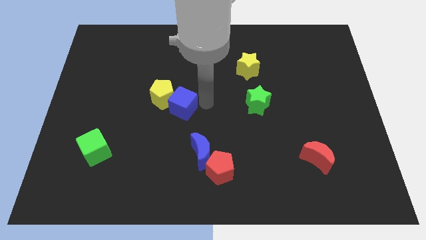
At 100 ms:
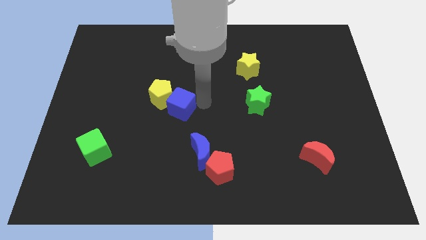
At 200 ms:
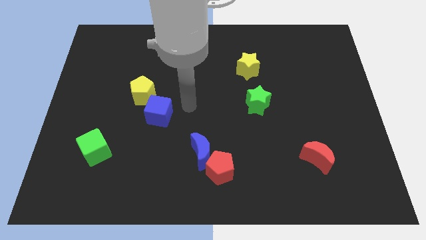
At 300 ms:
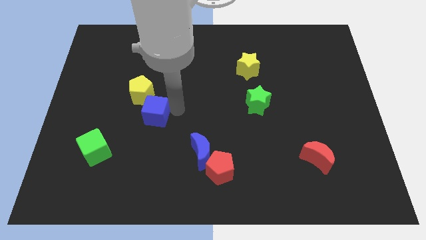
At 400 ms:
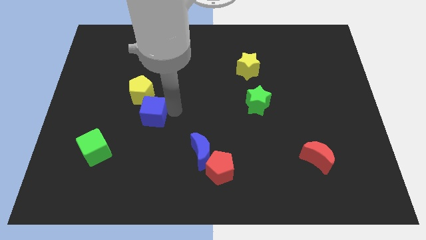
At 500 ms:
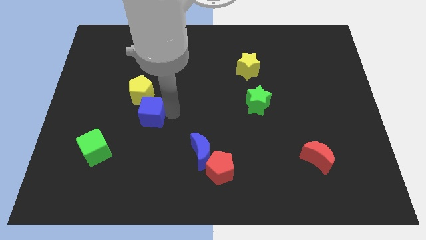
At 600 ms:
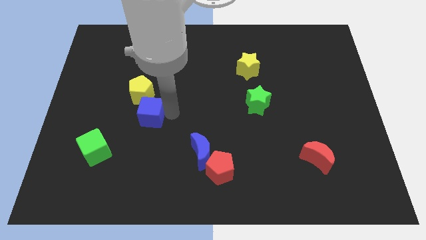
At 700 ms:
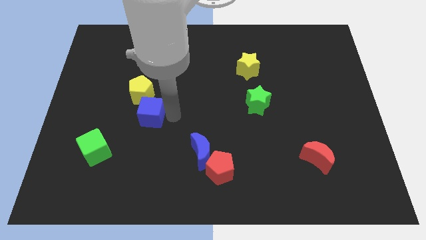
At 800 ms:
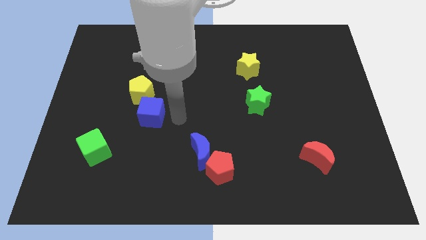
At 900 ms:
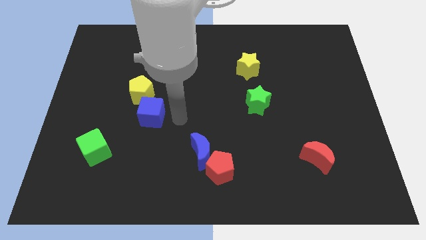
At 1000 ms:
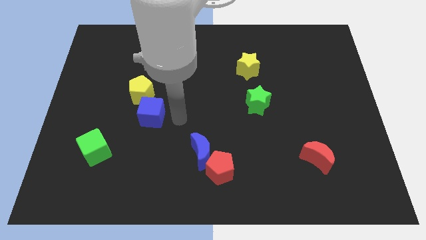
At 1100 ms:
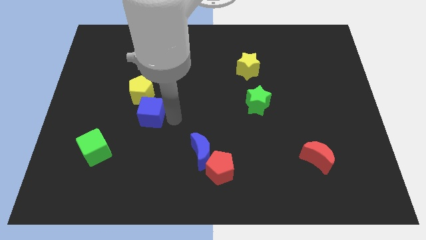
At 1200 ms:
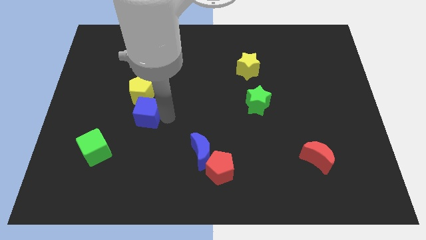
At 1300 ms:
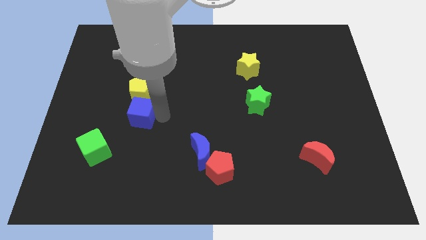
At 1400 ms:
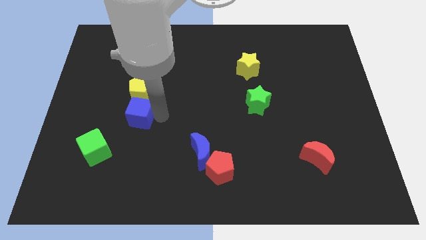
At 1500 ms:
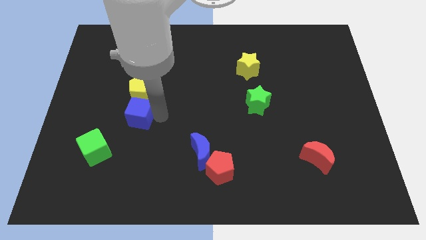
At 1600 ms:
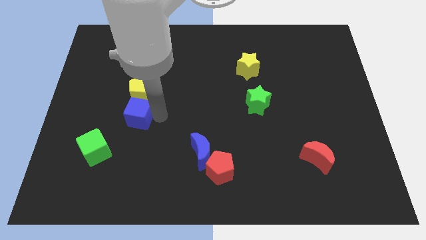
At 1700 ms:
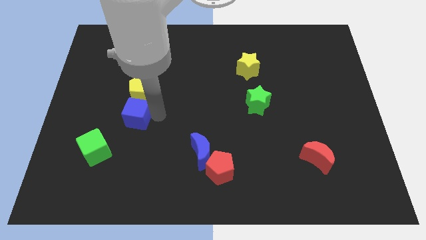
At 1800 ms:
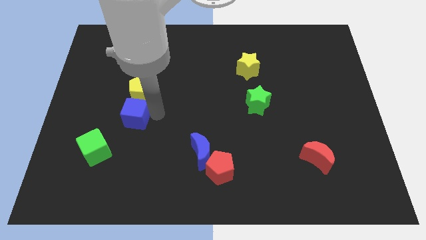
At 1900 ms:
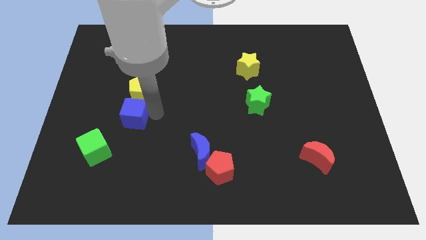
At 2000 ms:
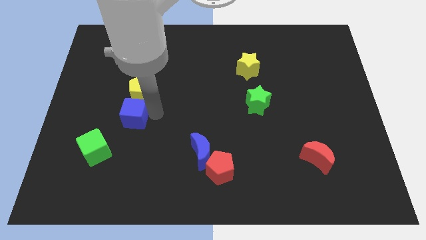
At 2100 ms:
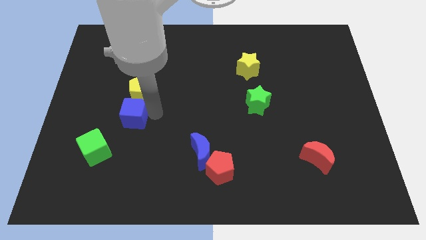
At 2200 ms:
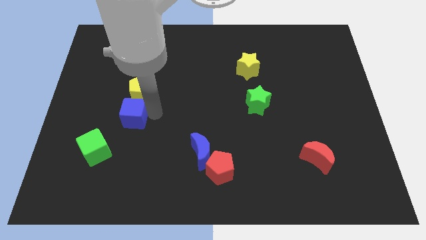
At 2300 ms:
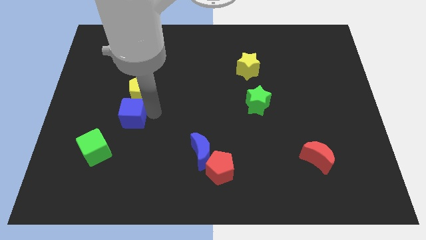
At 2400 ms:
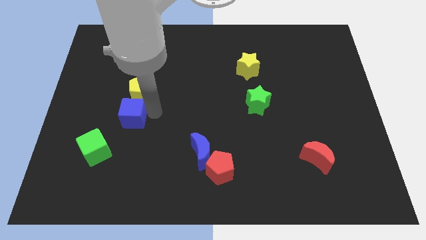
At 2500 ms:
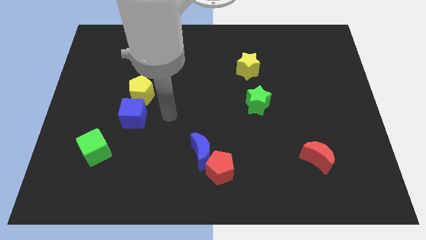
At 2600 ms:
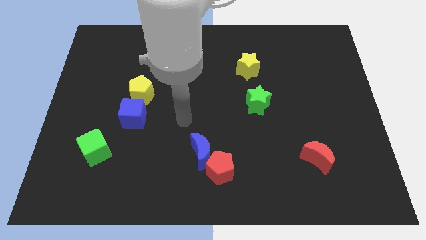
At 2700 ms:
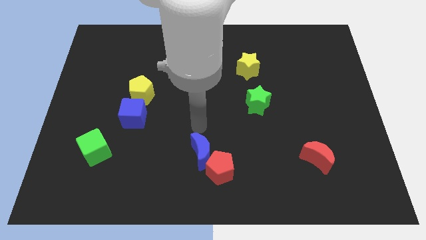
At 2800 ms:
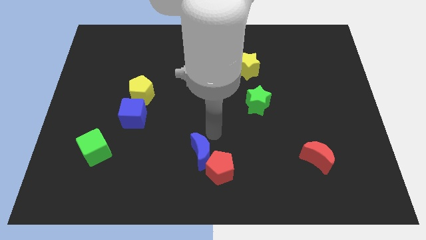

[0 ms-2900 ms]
place blue cube below to the yellow pentagon

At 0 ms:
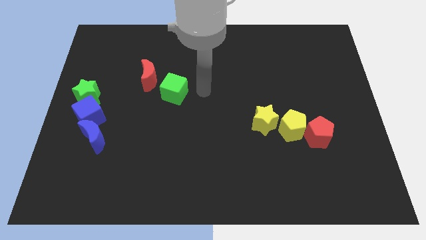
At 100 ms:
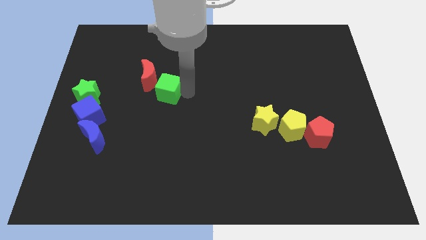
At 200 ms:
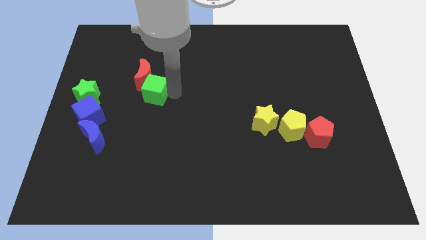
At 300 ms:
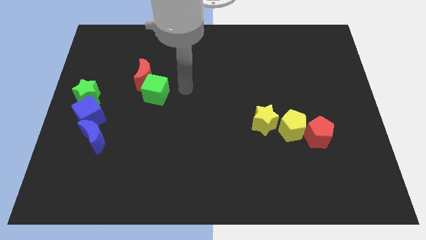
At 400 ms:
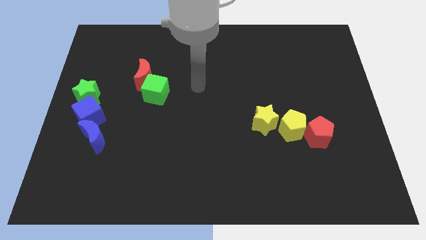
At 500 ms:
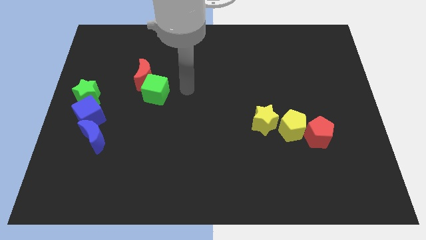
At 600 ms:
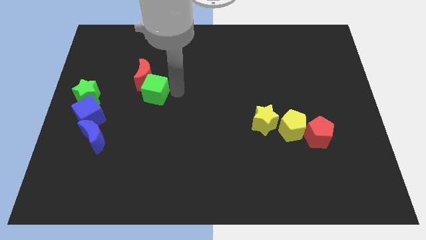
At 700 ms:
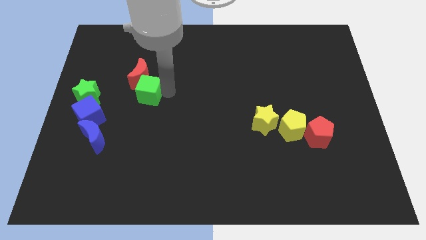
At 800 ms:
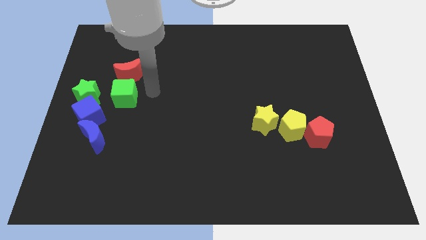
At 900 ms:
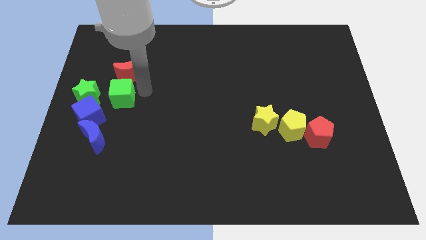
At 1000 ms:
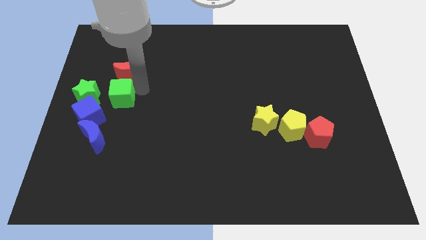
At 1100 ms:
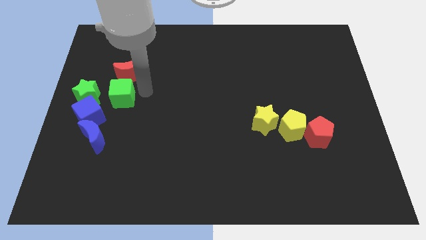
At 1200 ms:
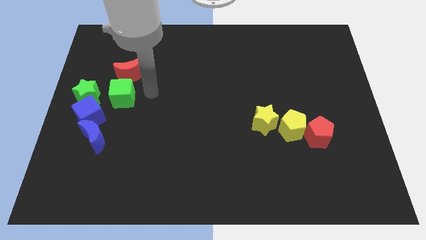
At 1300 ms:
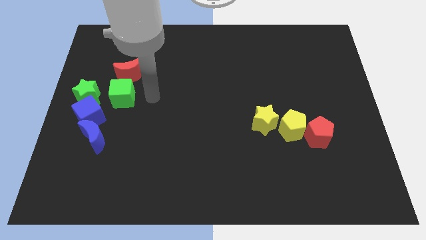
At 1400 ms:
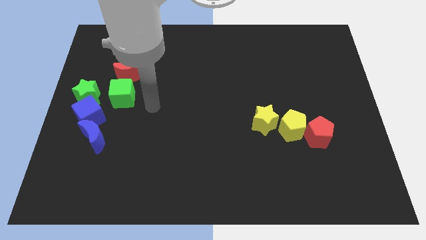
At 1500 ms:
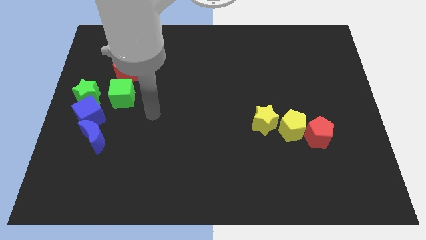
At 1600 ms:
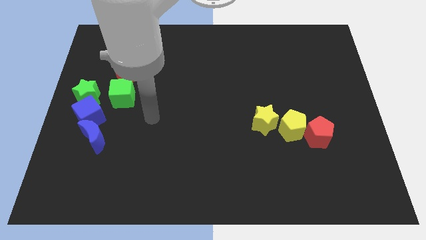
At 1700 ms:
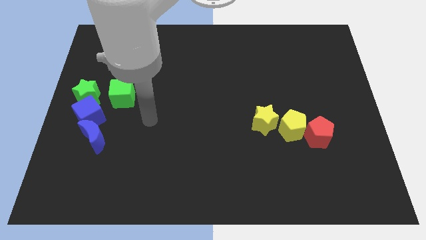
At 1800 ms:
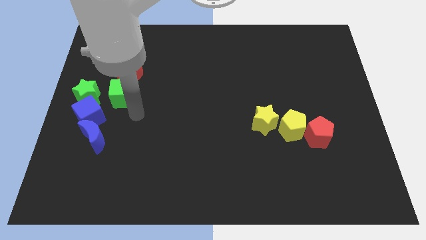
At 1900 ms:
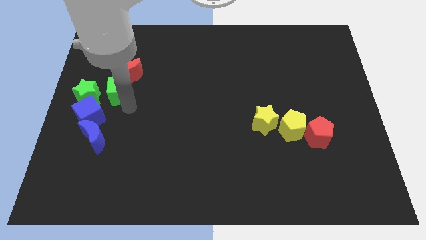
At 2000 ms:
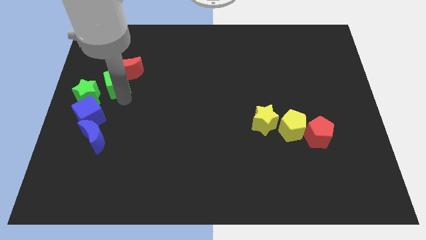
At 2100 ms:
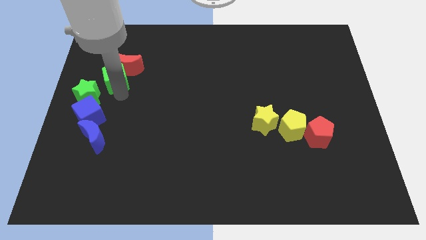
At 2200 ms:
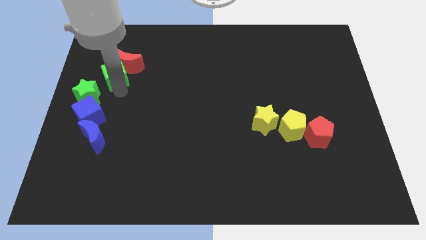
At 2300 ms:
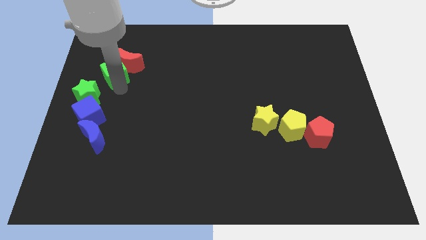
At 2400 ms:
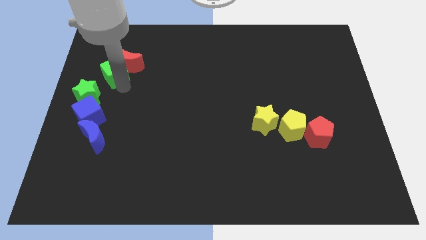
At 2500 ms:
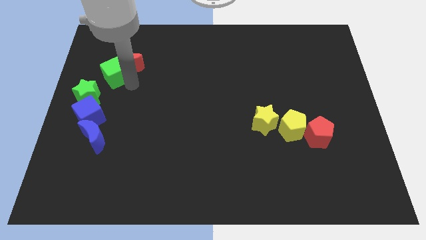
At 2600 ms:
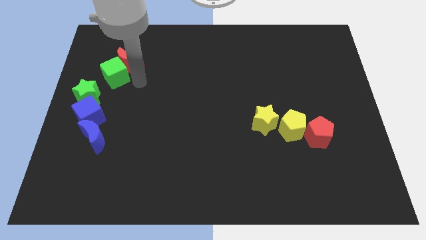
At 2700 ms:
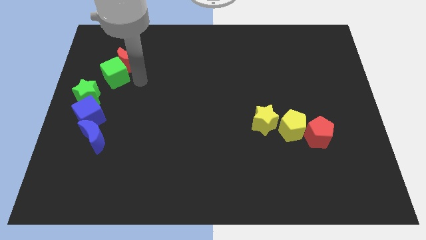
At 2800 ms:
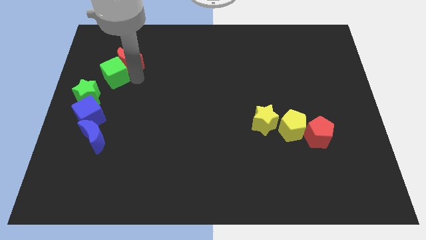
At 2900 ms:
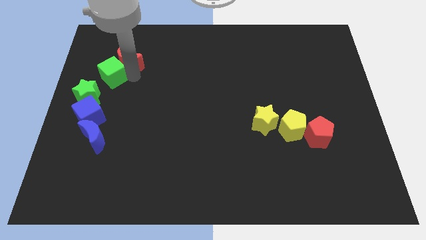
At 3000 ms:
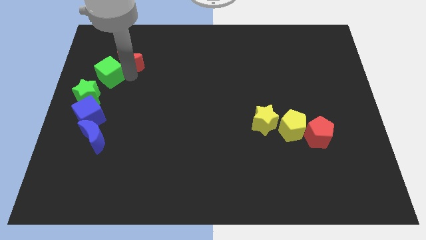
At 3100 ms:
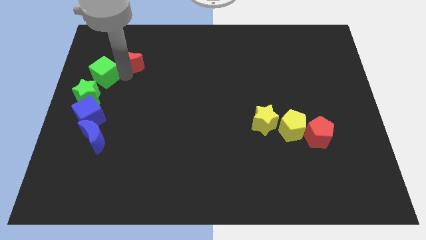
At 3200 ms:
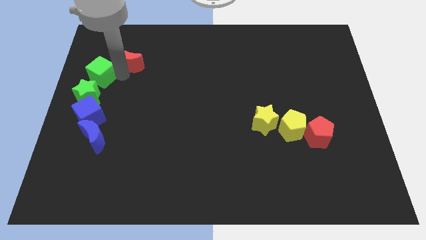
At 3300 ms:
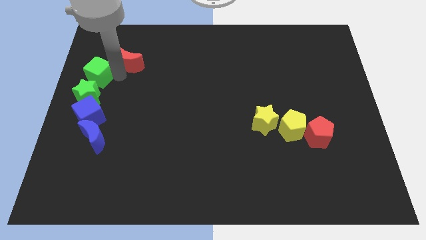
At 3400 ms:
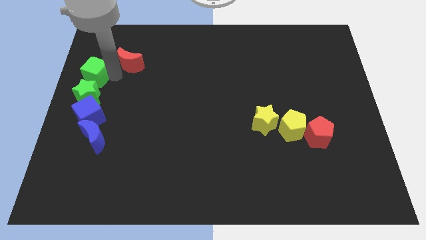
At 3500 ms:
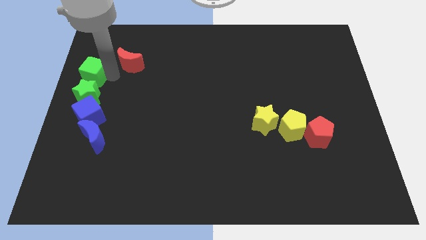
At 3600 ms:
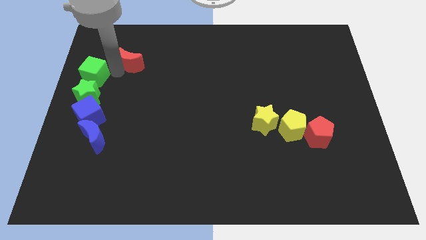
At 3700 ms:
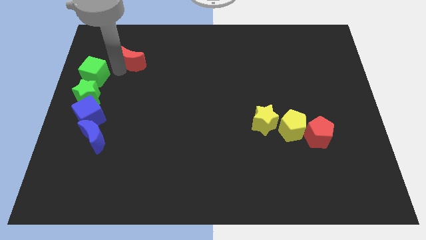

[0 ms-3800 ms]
move the green cube above the green star

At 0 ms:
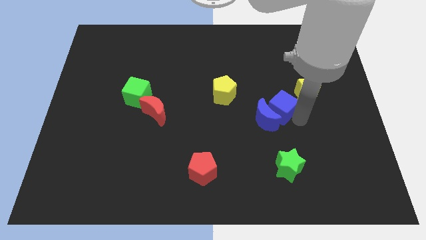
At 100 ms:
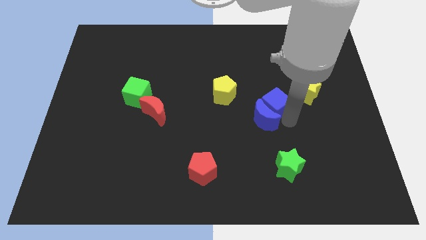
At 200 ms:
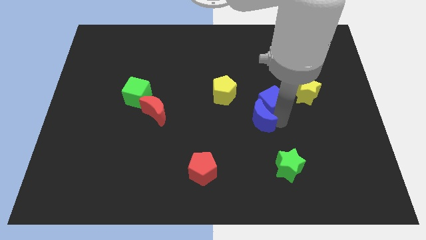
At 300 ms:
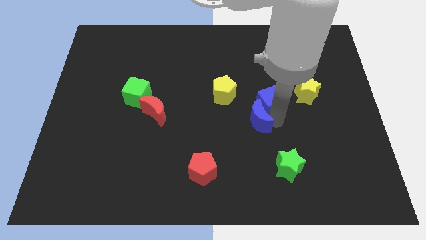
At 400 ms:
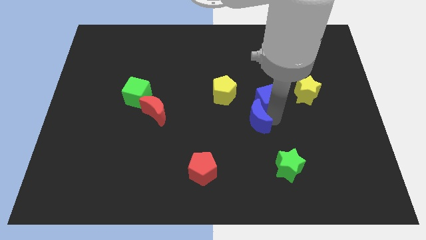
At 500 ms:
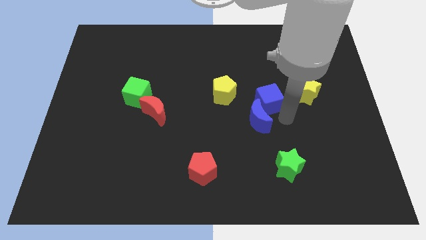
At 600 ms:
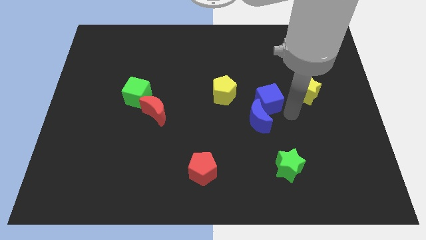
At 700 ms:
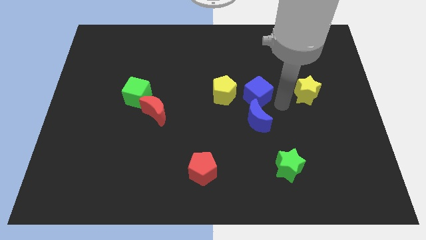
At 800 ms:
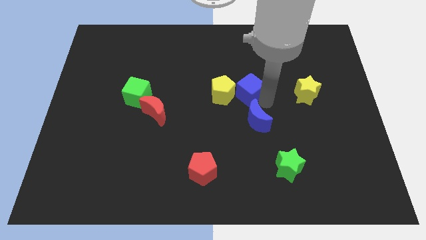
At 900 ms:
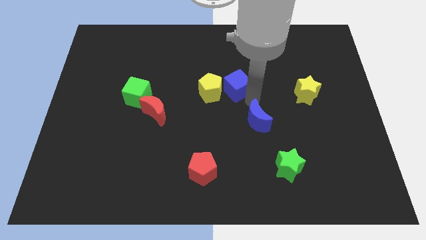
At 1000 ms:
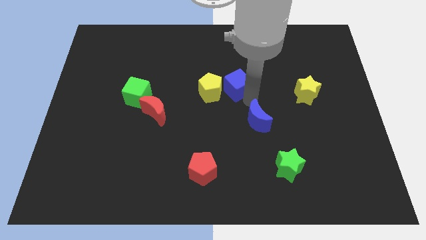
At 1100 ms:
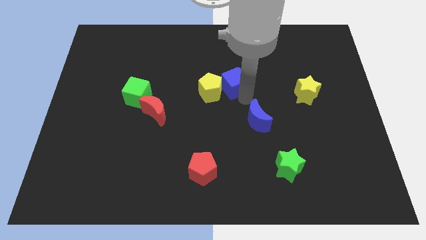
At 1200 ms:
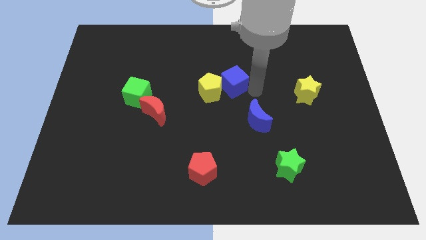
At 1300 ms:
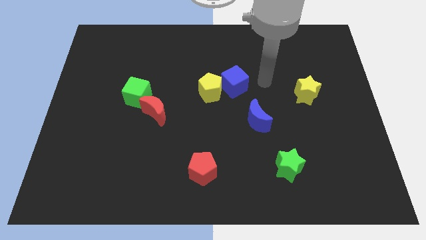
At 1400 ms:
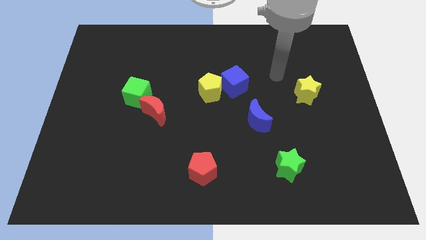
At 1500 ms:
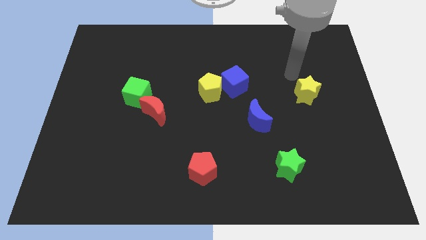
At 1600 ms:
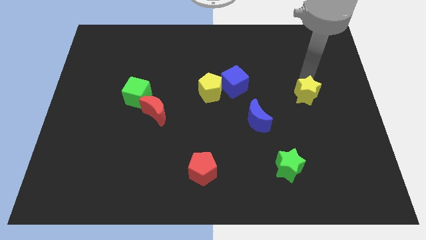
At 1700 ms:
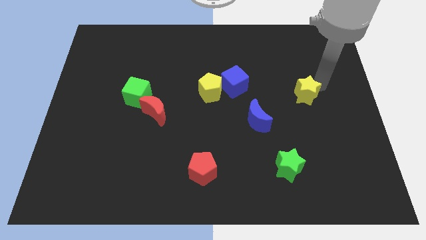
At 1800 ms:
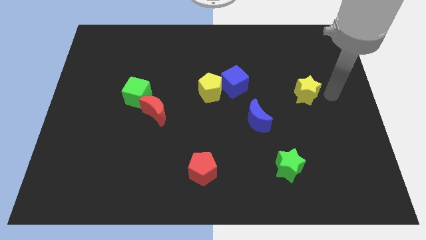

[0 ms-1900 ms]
move the blue cube near to the yellow pentagon

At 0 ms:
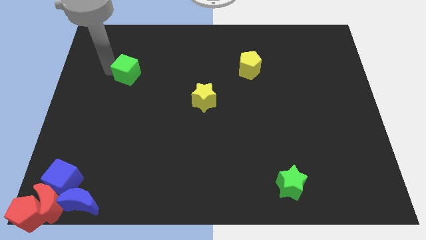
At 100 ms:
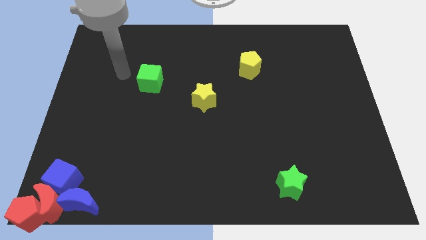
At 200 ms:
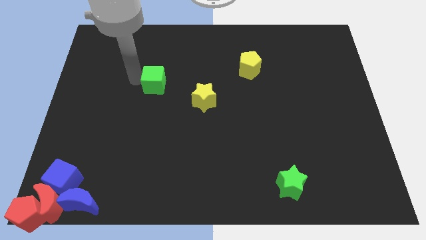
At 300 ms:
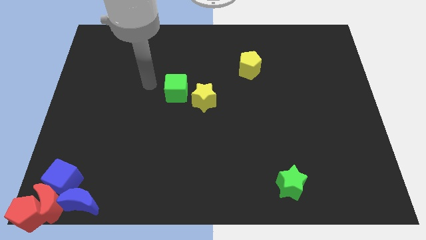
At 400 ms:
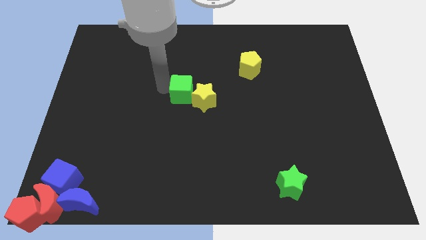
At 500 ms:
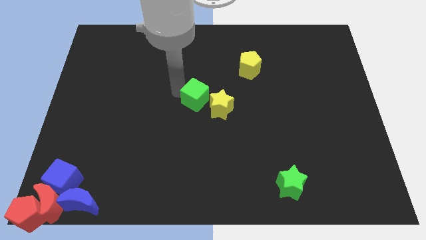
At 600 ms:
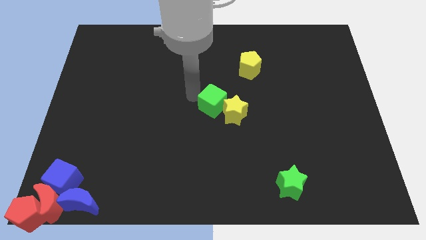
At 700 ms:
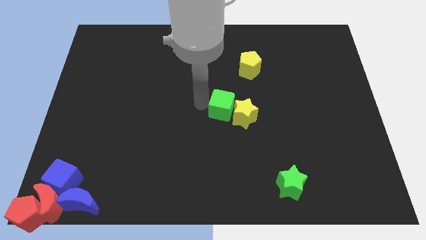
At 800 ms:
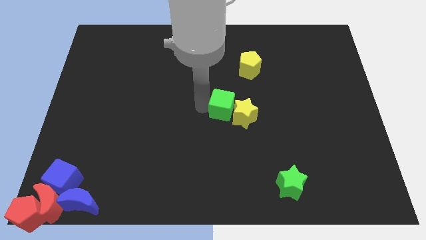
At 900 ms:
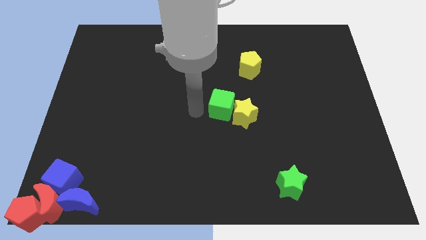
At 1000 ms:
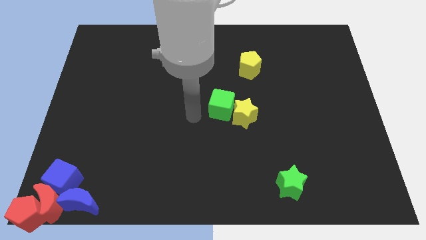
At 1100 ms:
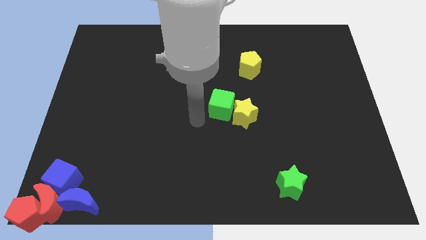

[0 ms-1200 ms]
push the green cube into the yellow star
